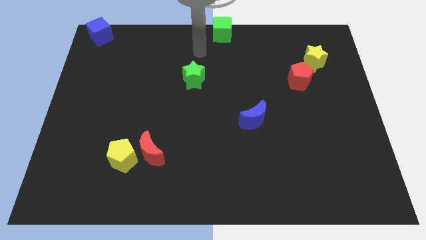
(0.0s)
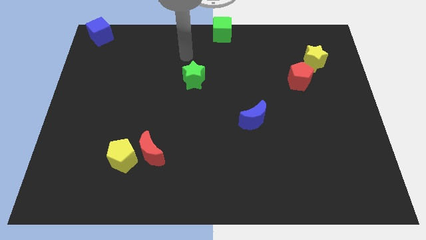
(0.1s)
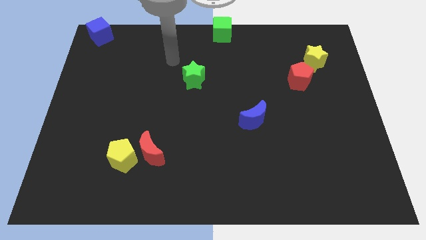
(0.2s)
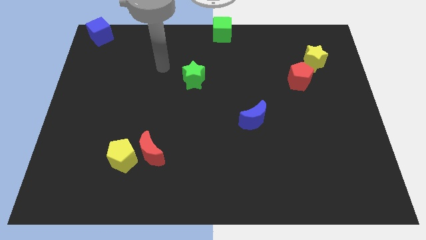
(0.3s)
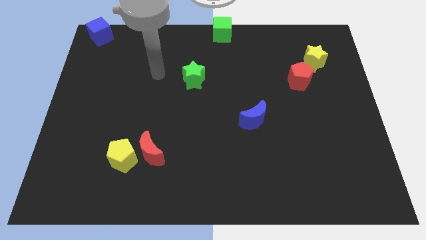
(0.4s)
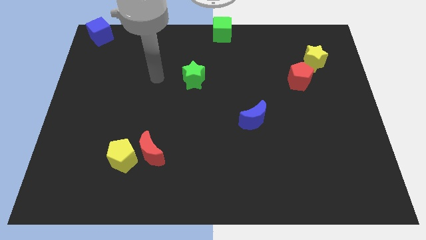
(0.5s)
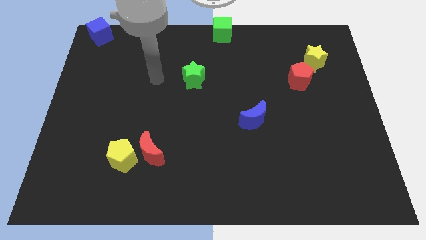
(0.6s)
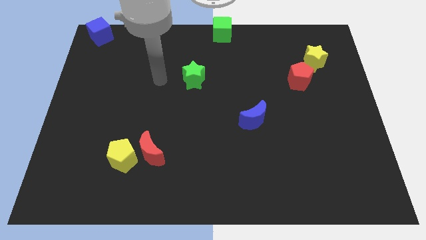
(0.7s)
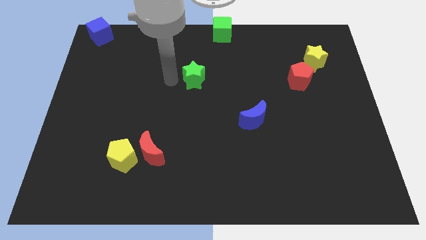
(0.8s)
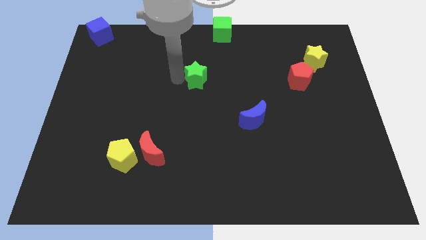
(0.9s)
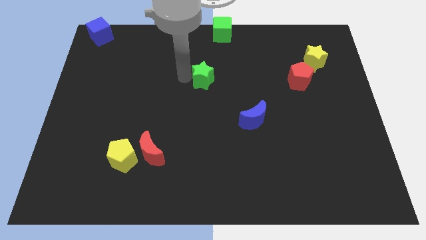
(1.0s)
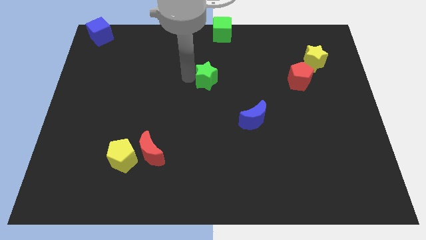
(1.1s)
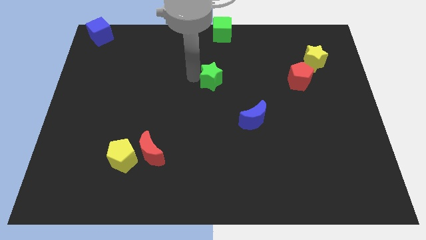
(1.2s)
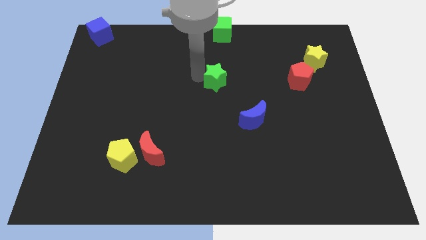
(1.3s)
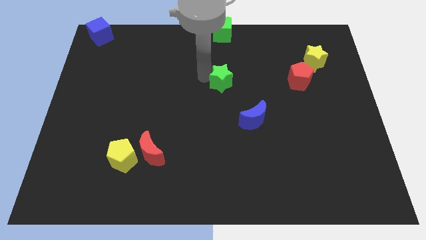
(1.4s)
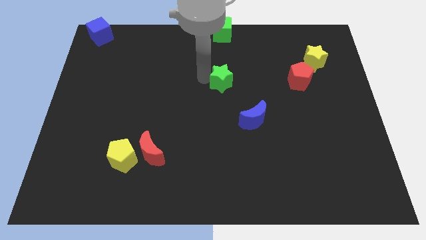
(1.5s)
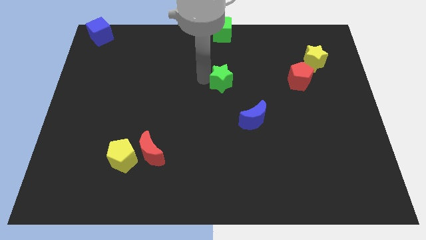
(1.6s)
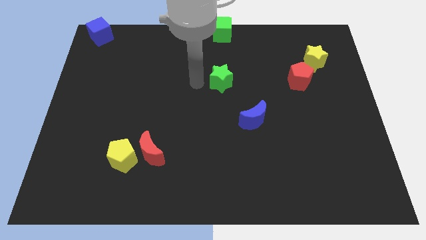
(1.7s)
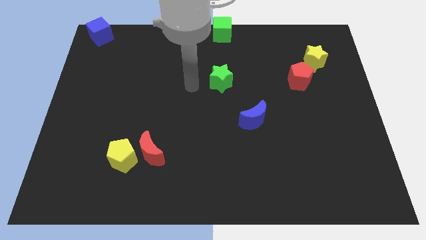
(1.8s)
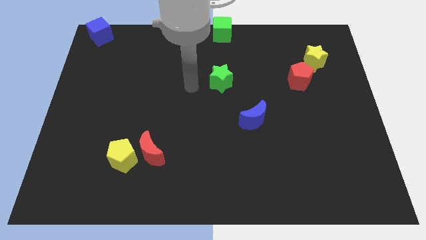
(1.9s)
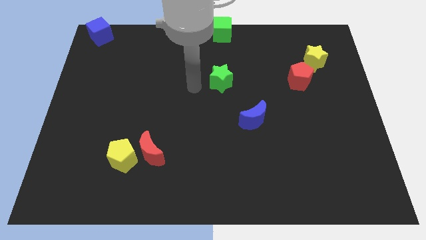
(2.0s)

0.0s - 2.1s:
move green star below the green cube

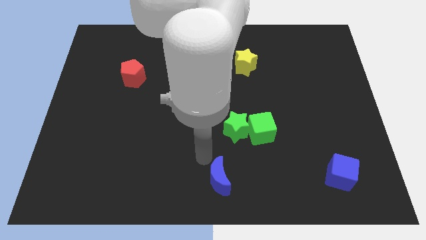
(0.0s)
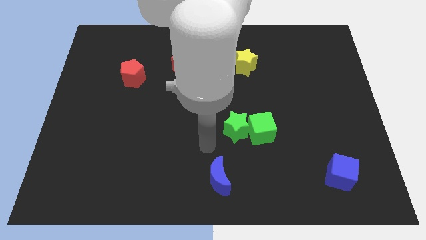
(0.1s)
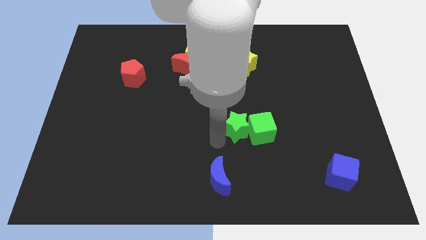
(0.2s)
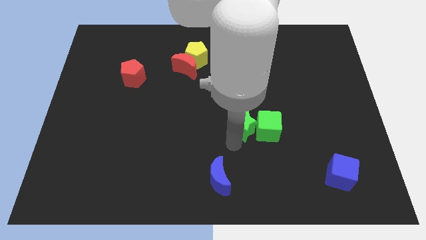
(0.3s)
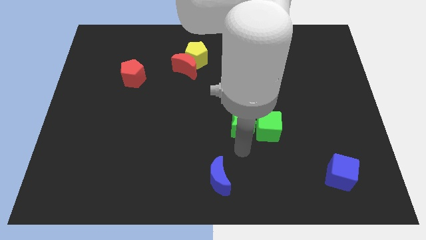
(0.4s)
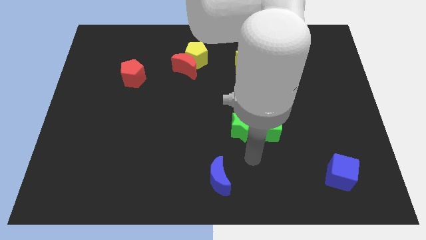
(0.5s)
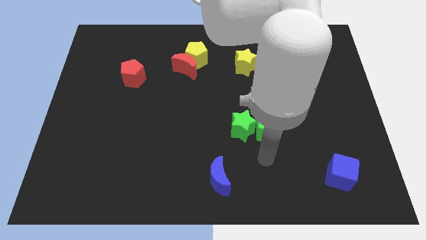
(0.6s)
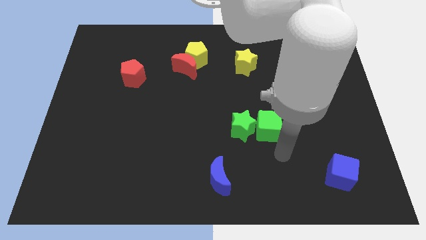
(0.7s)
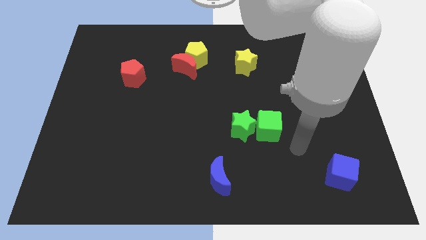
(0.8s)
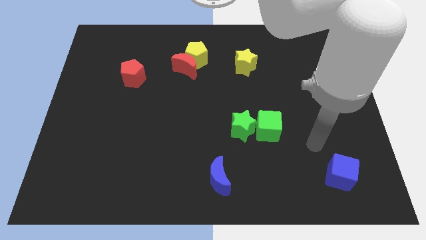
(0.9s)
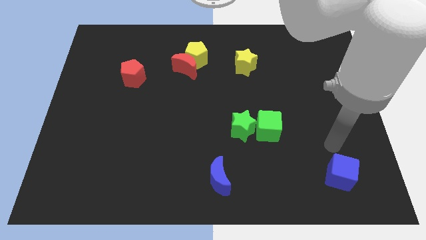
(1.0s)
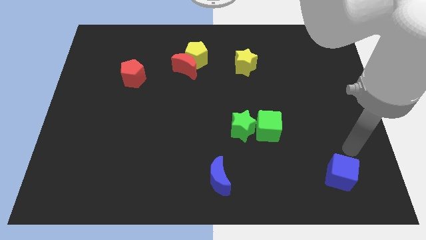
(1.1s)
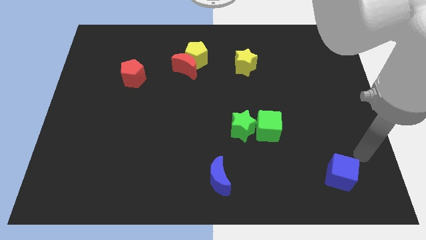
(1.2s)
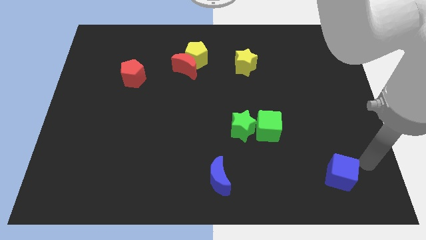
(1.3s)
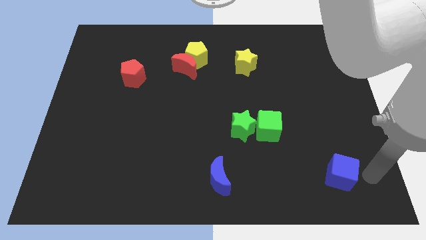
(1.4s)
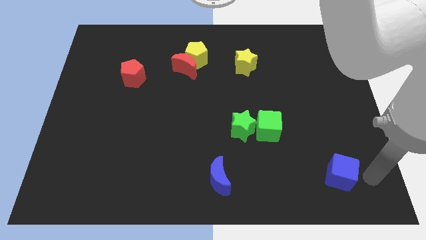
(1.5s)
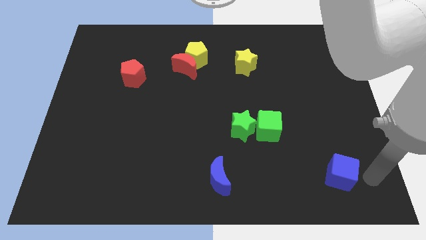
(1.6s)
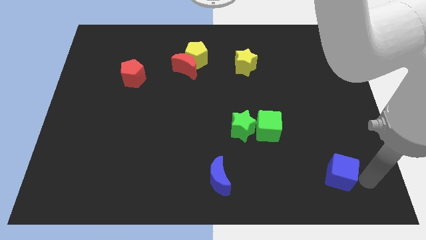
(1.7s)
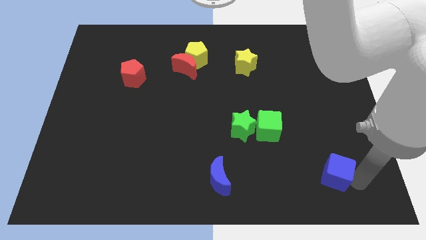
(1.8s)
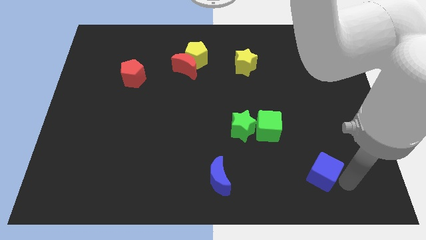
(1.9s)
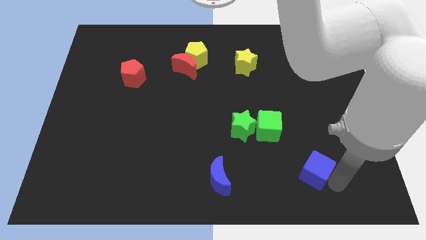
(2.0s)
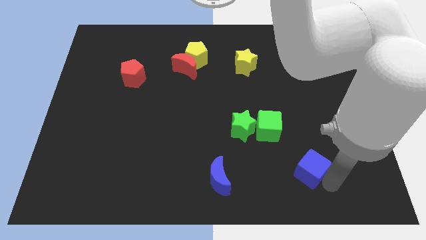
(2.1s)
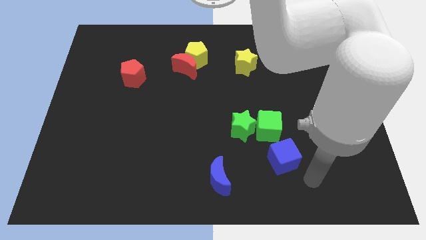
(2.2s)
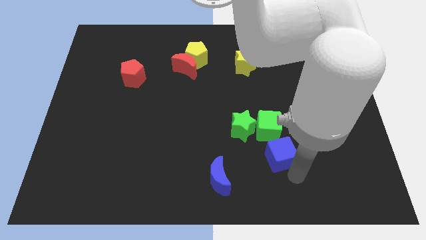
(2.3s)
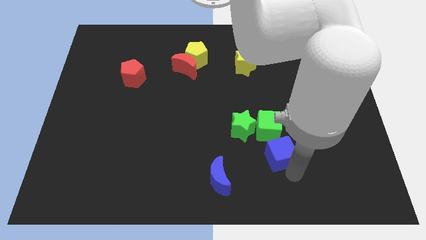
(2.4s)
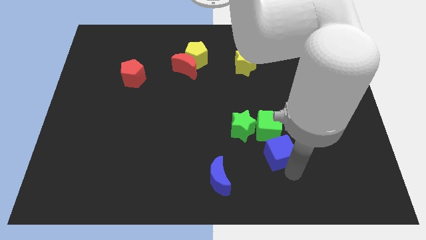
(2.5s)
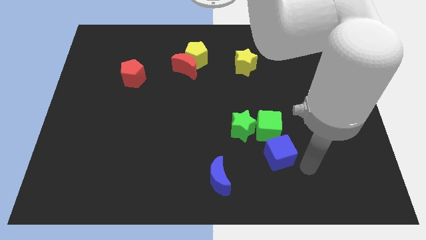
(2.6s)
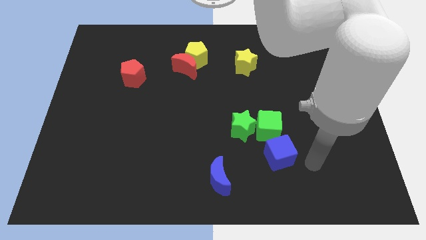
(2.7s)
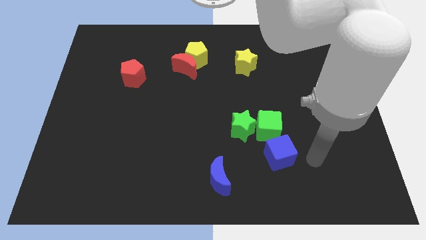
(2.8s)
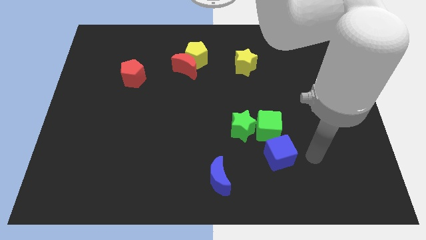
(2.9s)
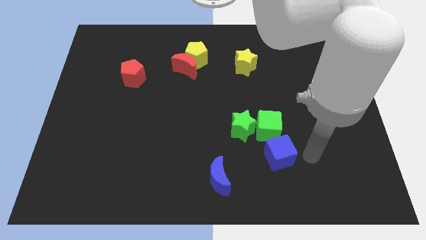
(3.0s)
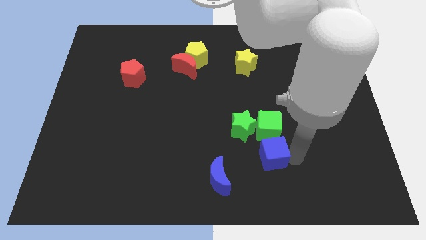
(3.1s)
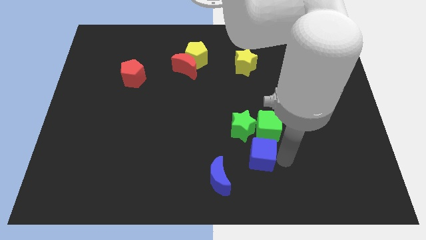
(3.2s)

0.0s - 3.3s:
place the blue cube below the green cube

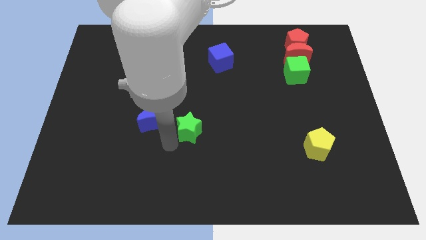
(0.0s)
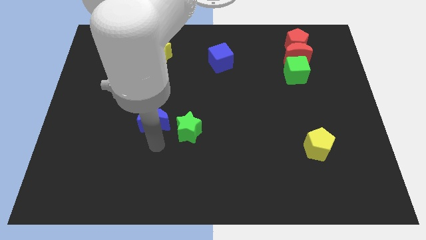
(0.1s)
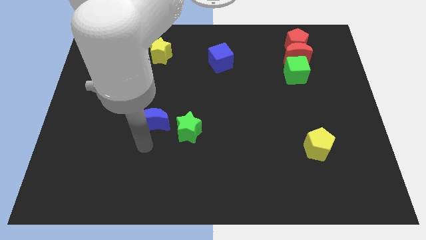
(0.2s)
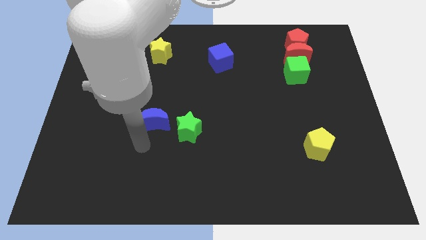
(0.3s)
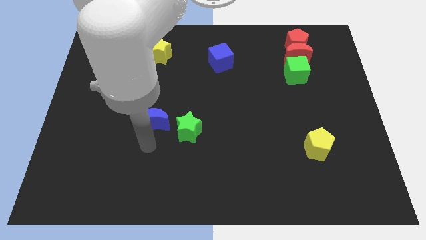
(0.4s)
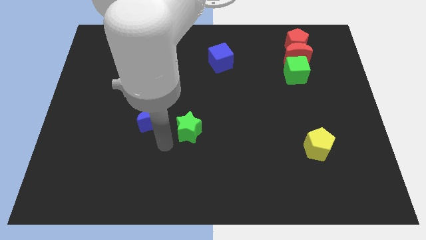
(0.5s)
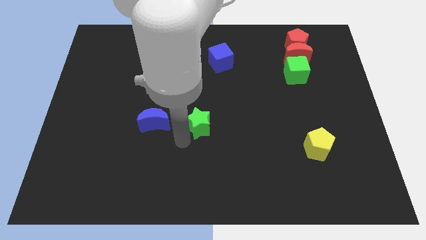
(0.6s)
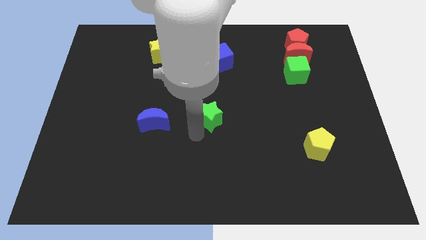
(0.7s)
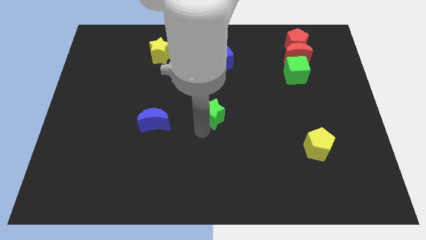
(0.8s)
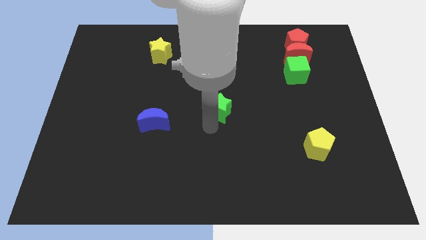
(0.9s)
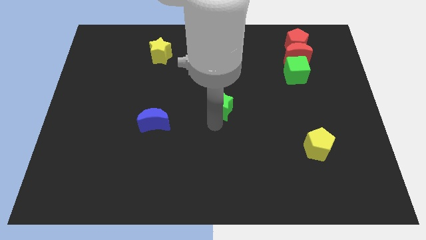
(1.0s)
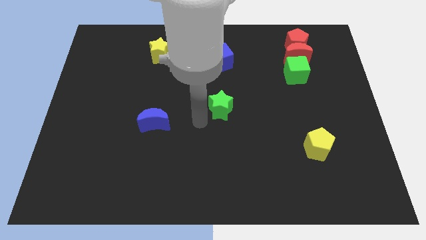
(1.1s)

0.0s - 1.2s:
move green star below the blue cube

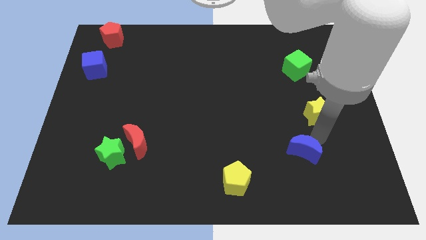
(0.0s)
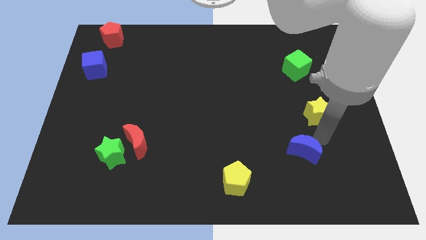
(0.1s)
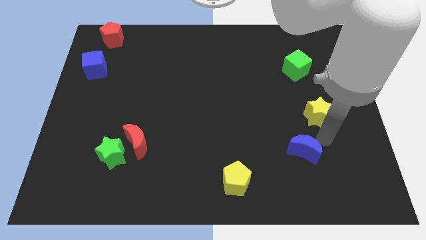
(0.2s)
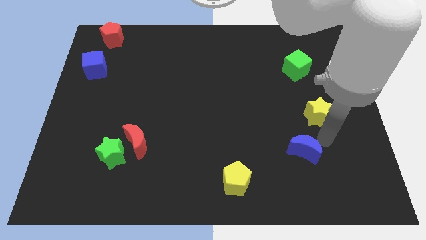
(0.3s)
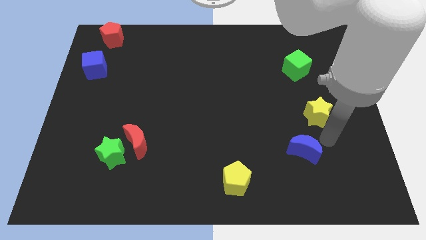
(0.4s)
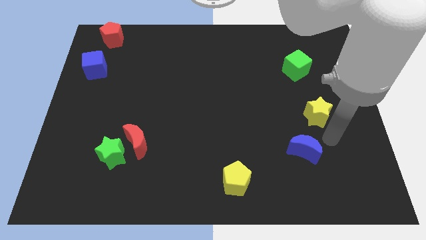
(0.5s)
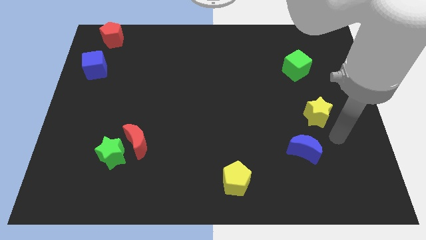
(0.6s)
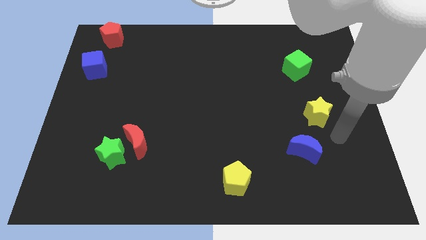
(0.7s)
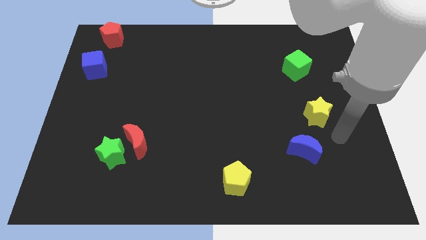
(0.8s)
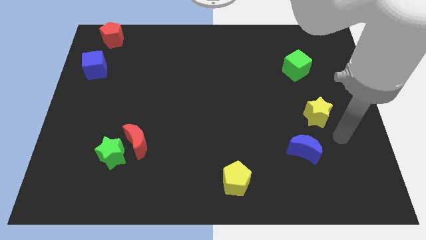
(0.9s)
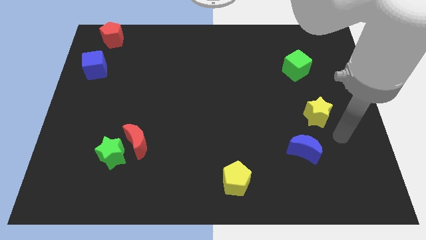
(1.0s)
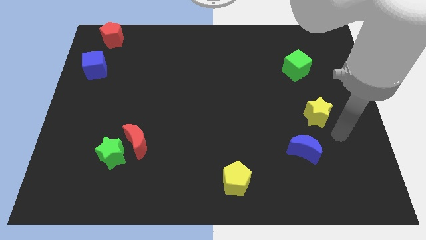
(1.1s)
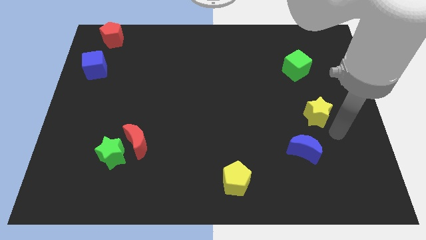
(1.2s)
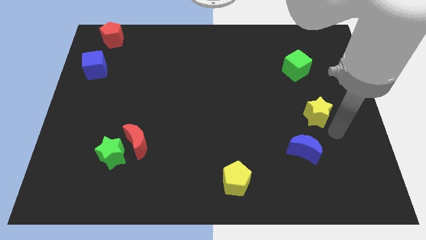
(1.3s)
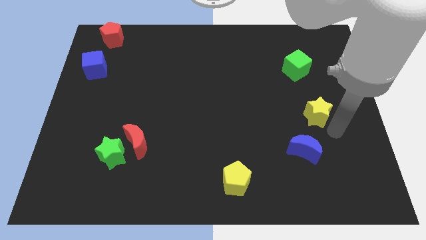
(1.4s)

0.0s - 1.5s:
move your arm to the bottom right of the yellow star

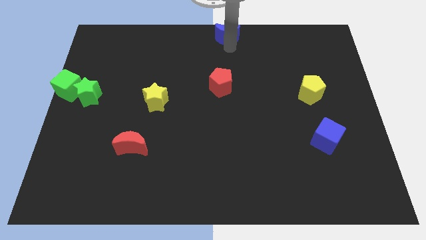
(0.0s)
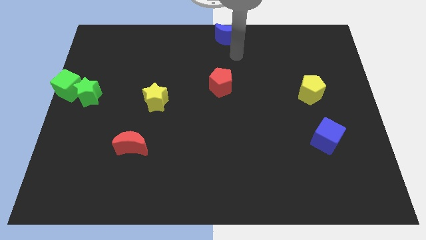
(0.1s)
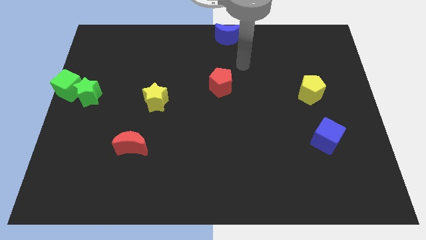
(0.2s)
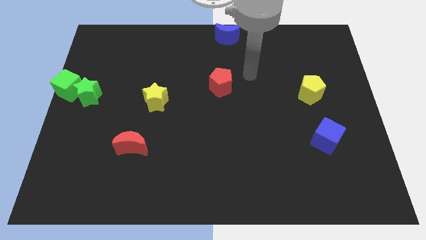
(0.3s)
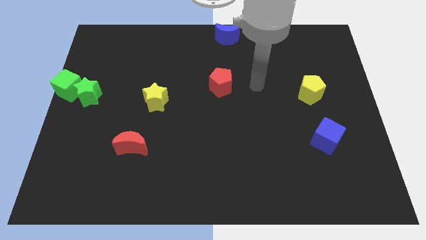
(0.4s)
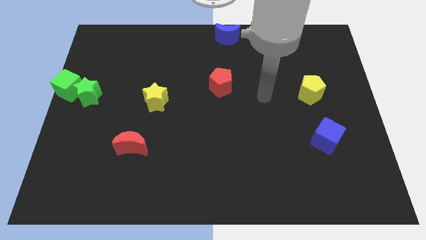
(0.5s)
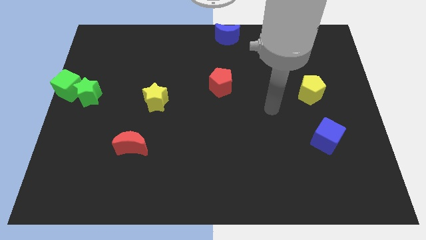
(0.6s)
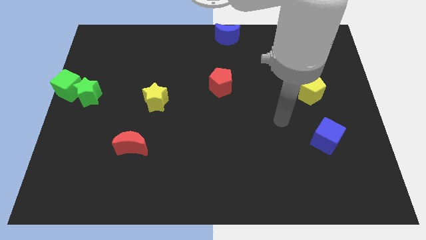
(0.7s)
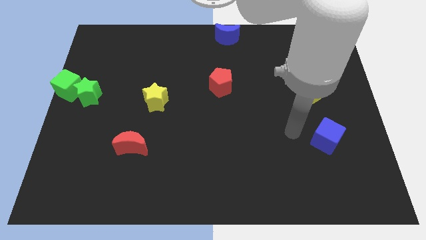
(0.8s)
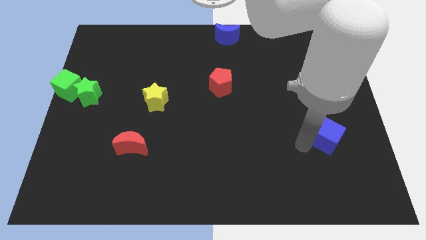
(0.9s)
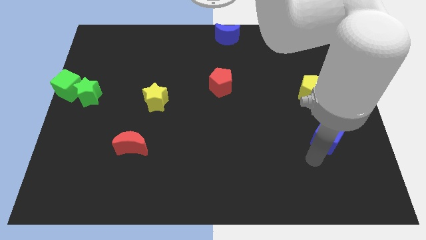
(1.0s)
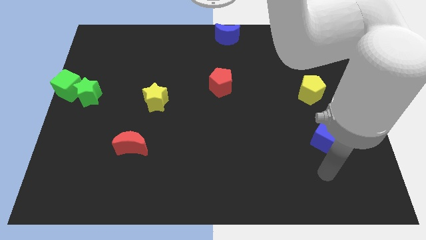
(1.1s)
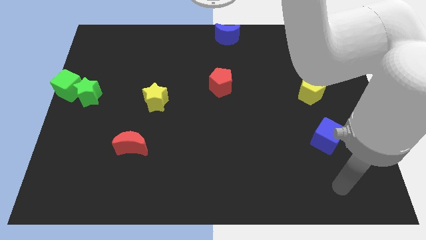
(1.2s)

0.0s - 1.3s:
point your arm at the bottom of the blue cube
